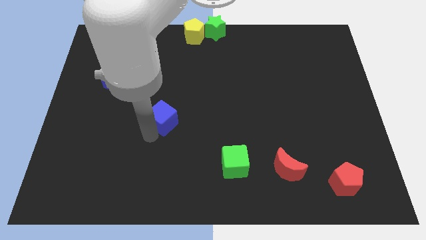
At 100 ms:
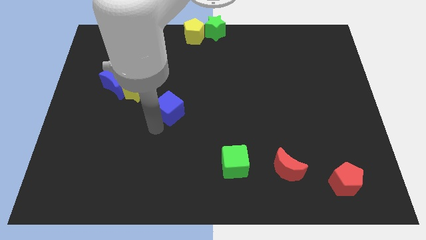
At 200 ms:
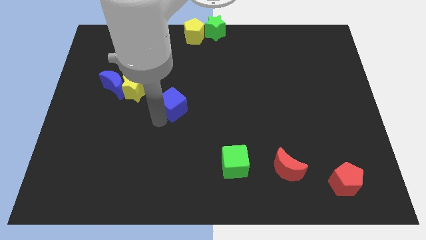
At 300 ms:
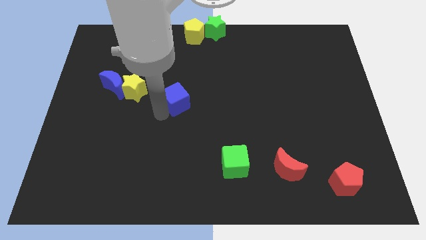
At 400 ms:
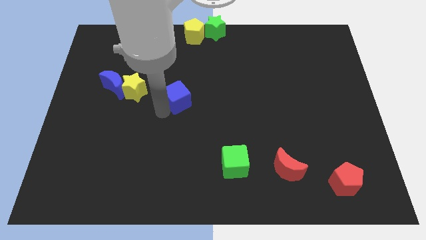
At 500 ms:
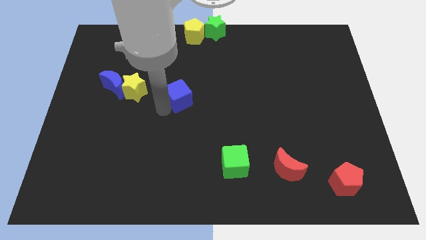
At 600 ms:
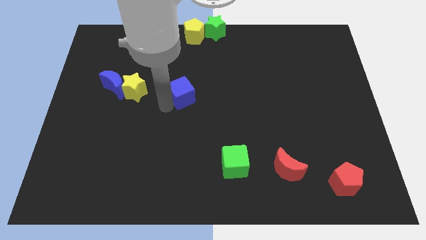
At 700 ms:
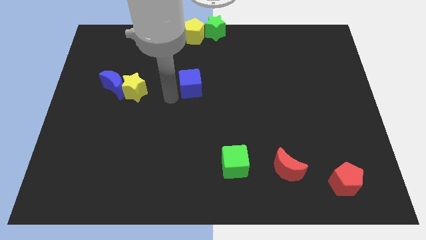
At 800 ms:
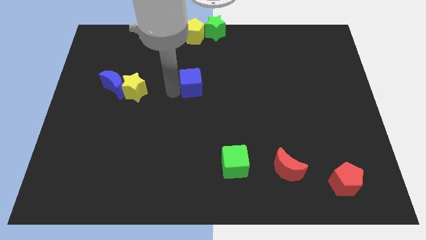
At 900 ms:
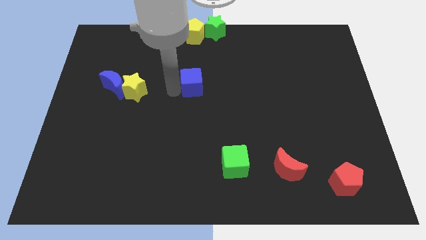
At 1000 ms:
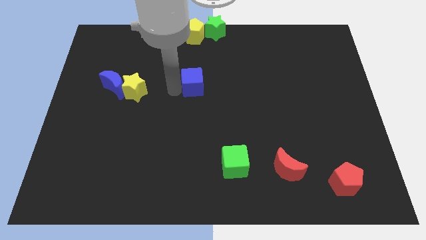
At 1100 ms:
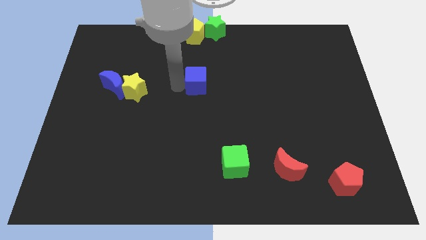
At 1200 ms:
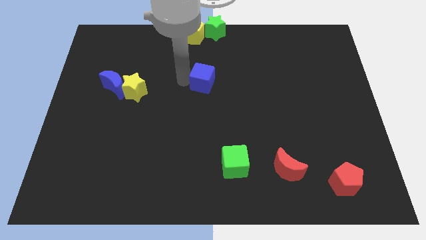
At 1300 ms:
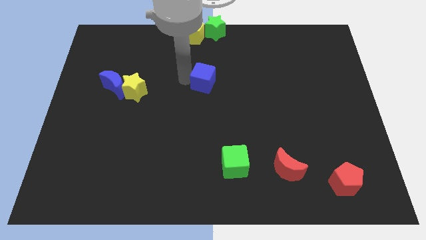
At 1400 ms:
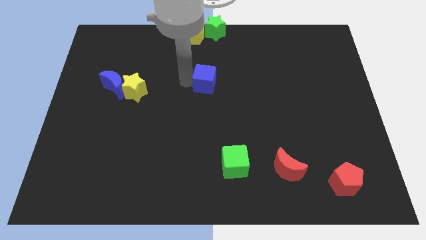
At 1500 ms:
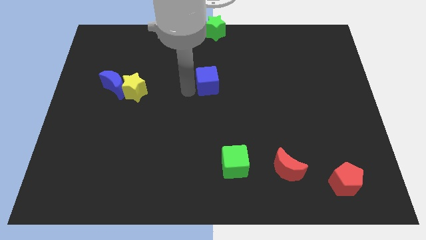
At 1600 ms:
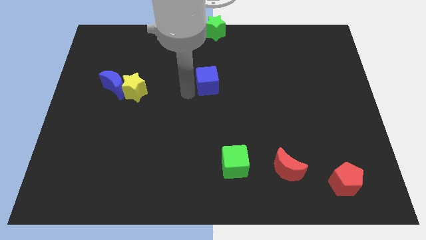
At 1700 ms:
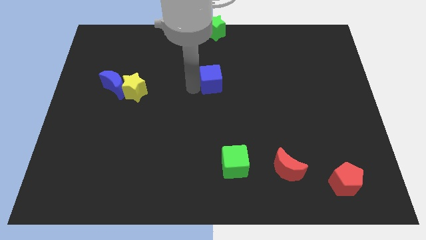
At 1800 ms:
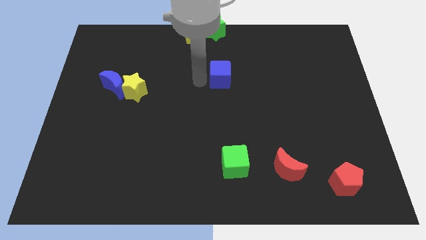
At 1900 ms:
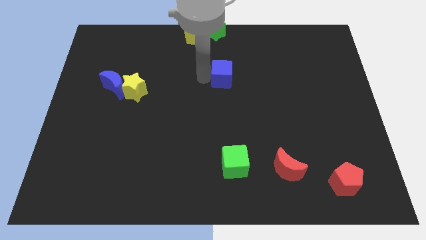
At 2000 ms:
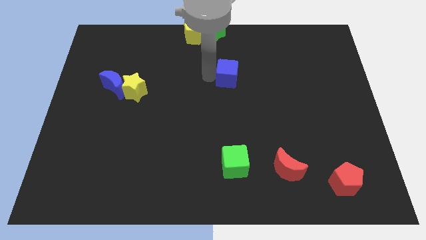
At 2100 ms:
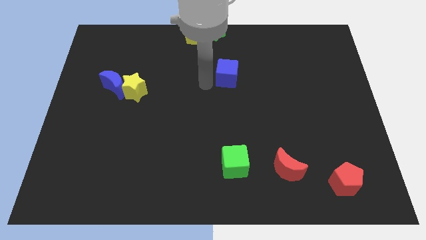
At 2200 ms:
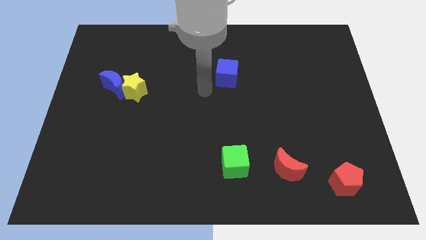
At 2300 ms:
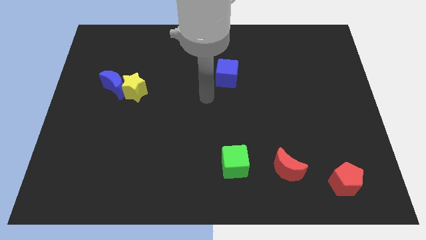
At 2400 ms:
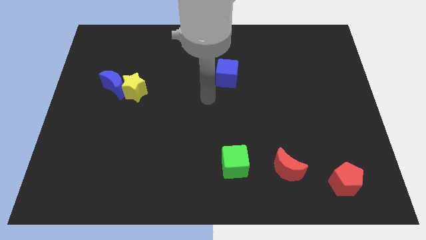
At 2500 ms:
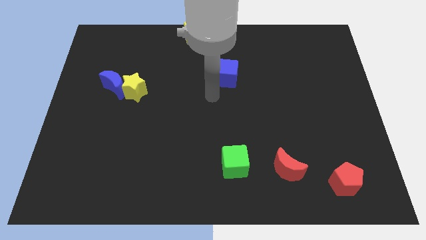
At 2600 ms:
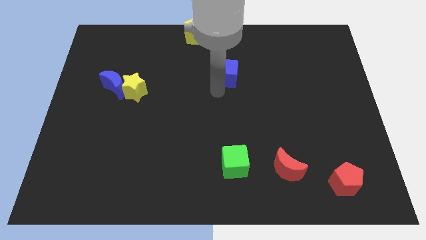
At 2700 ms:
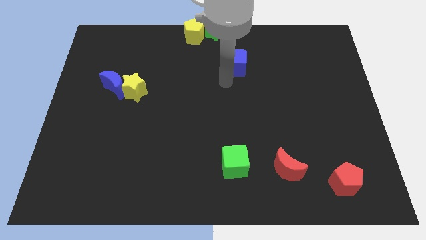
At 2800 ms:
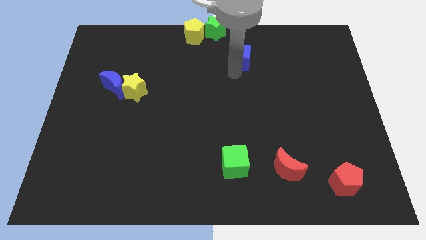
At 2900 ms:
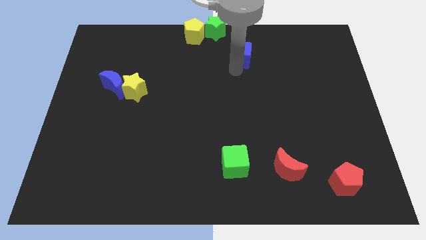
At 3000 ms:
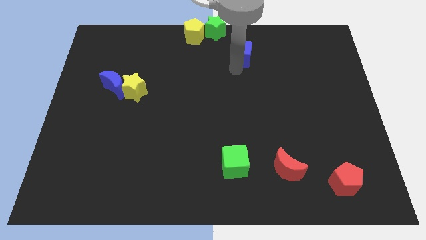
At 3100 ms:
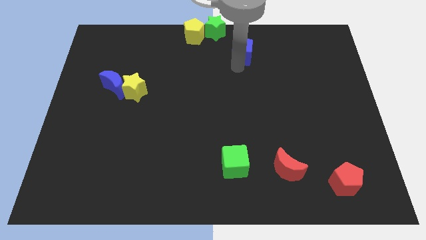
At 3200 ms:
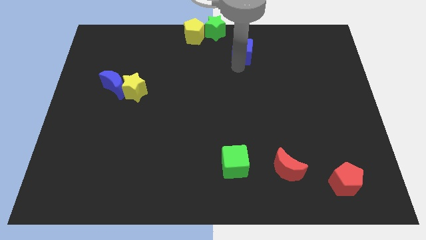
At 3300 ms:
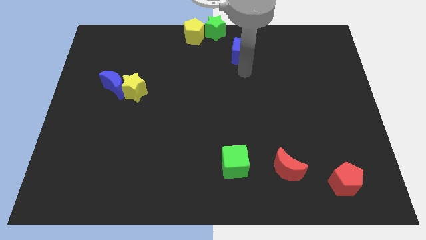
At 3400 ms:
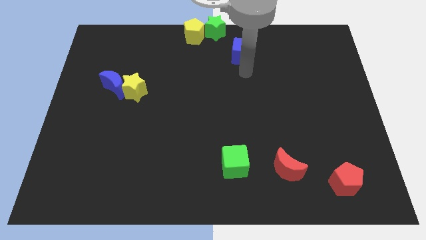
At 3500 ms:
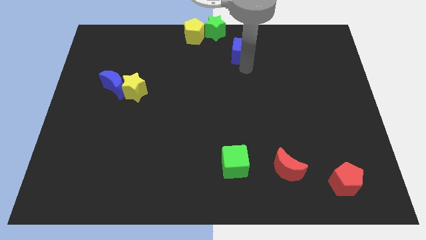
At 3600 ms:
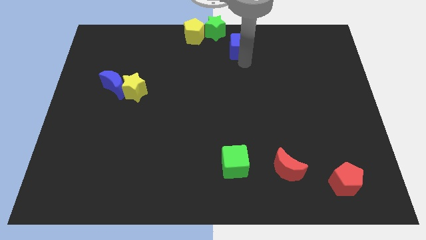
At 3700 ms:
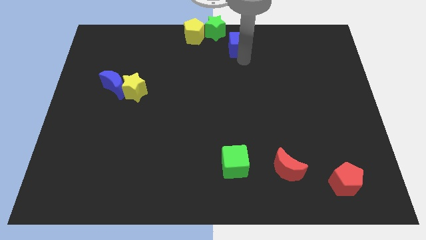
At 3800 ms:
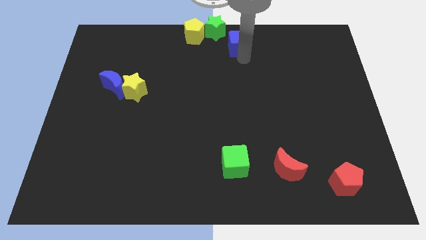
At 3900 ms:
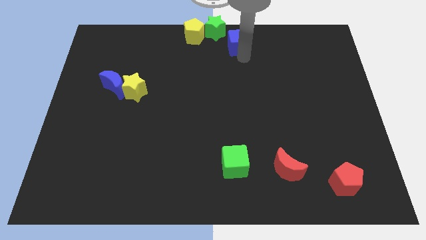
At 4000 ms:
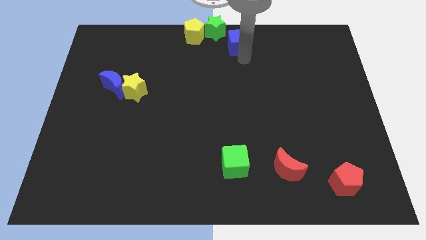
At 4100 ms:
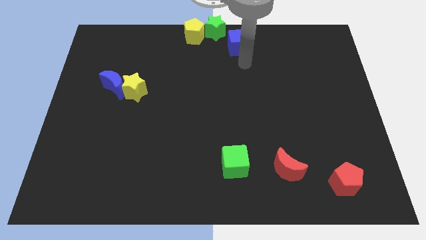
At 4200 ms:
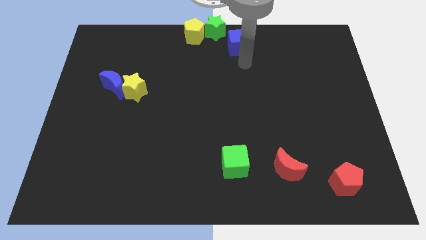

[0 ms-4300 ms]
move the blue cube to the top center of the board

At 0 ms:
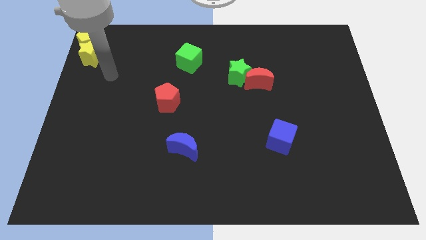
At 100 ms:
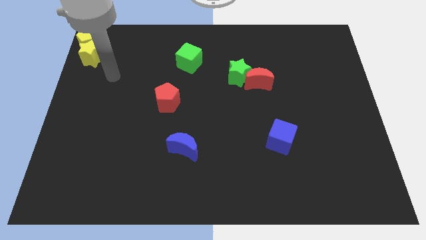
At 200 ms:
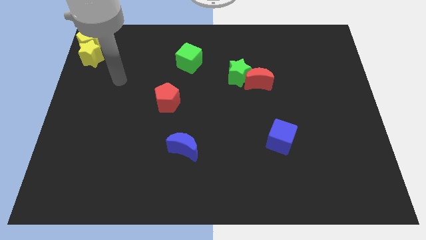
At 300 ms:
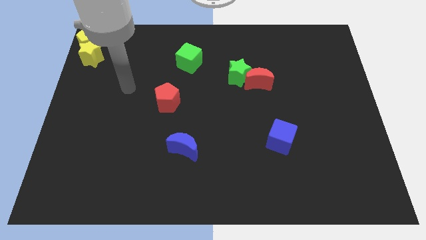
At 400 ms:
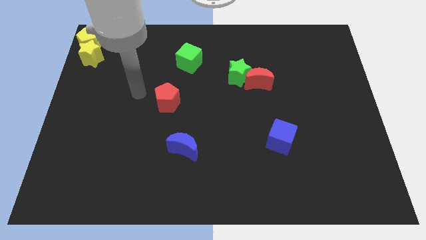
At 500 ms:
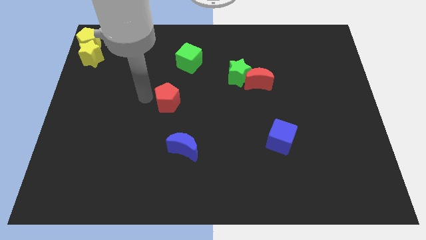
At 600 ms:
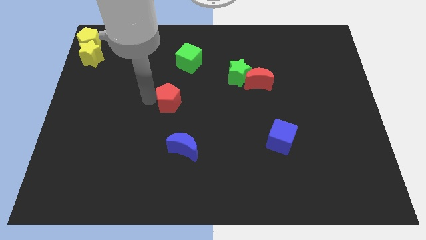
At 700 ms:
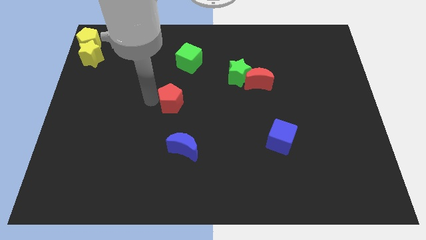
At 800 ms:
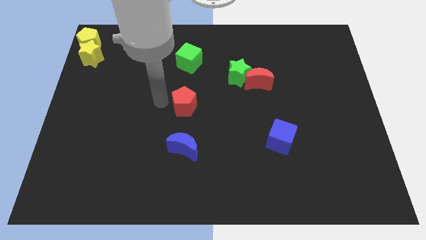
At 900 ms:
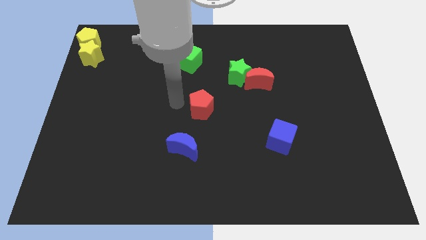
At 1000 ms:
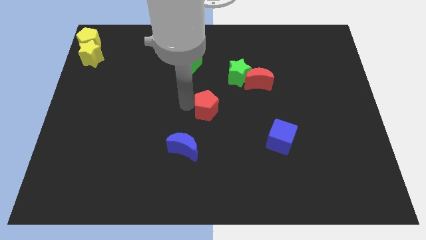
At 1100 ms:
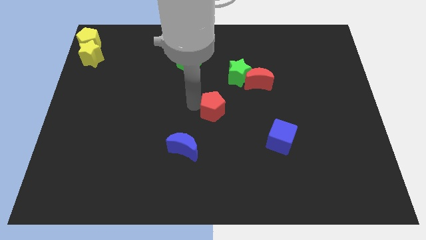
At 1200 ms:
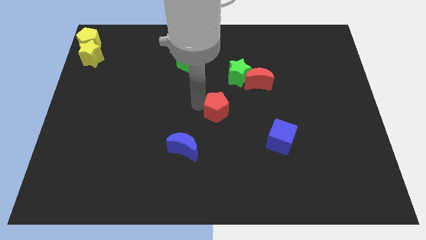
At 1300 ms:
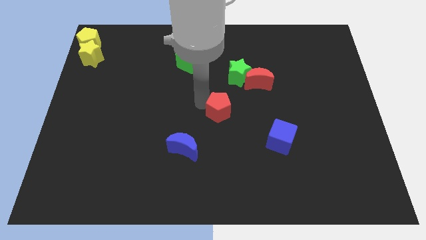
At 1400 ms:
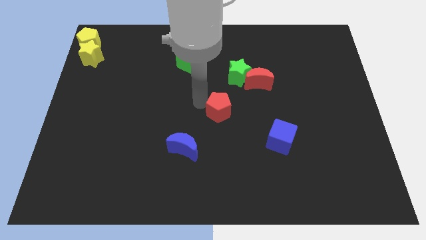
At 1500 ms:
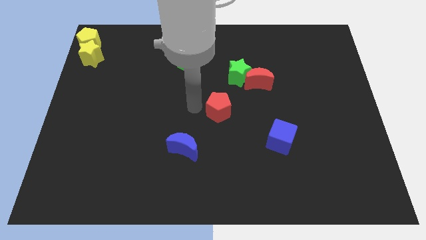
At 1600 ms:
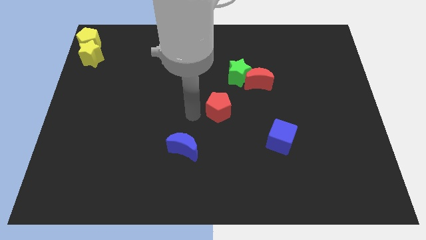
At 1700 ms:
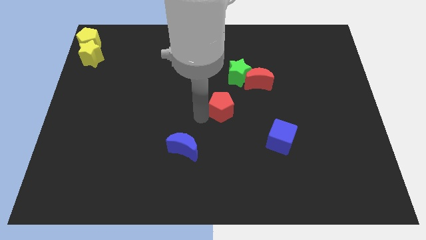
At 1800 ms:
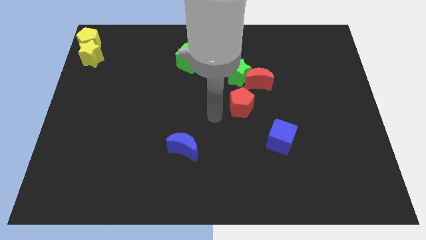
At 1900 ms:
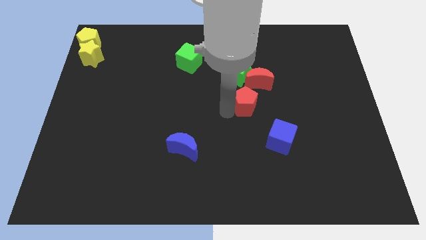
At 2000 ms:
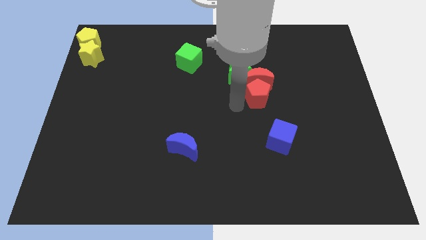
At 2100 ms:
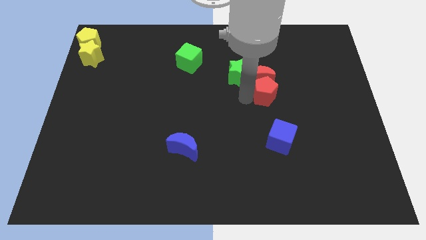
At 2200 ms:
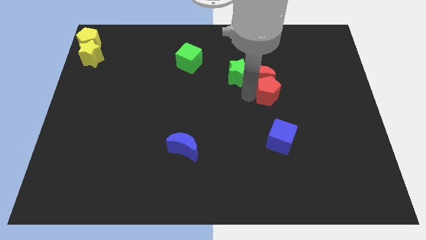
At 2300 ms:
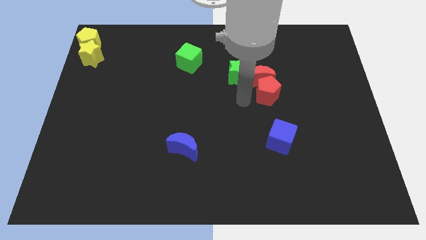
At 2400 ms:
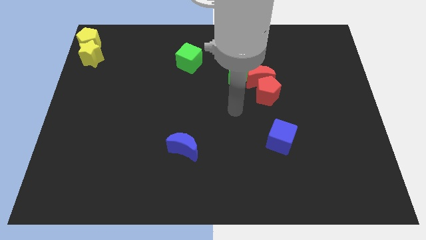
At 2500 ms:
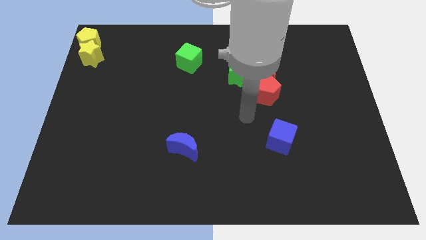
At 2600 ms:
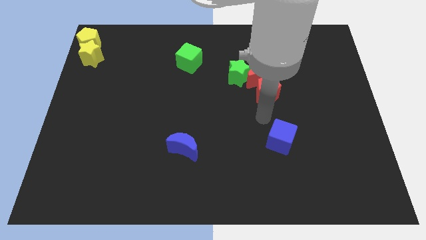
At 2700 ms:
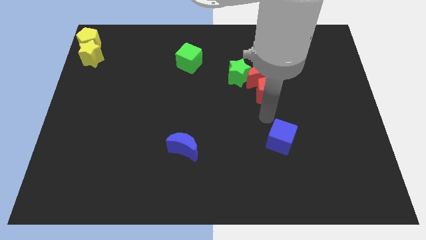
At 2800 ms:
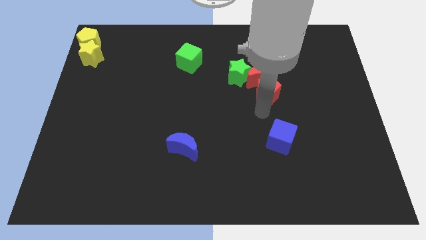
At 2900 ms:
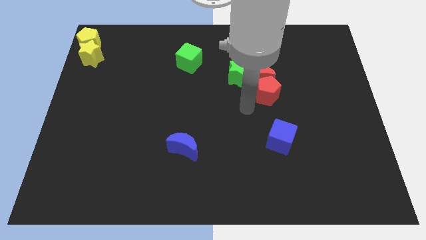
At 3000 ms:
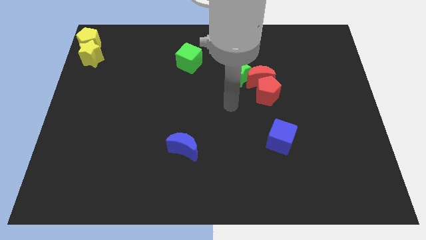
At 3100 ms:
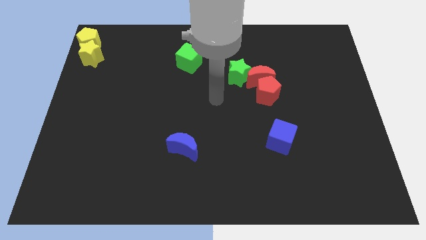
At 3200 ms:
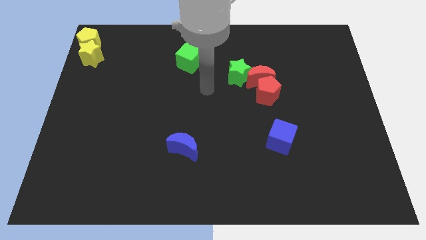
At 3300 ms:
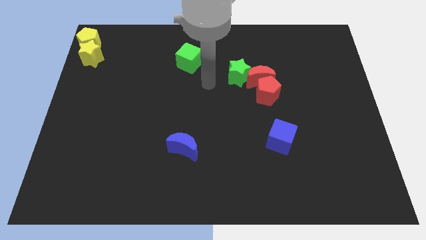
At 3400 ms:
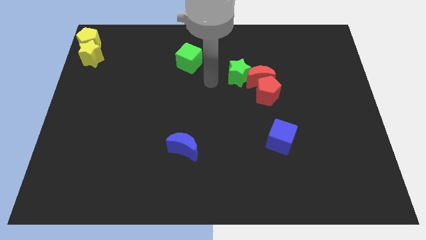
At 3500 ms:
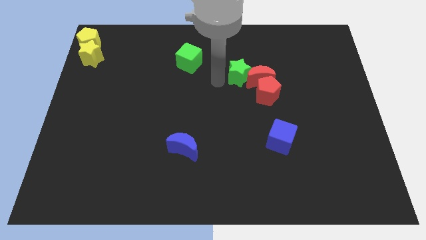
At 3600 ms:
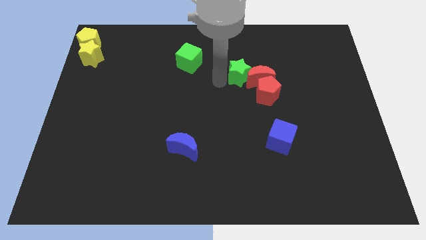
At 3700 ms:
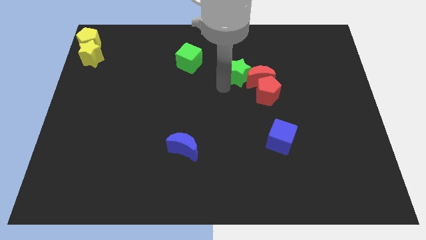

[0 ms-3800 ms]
move the red pentagon to the bottom of the red crescent

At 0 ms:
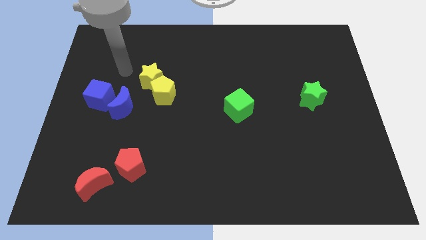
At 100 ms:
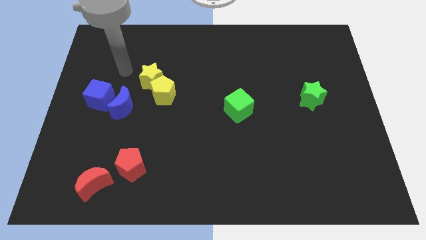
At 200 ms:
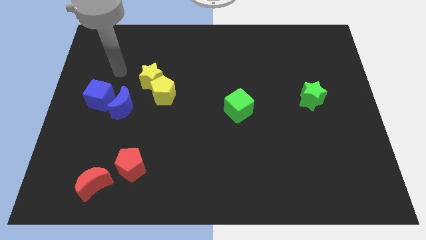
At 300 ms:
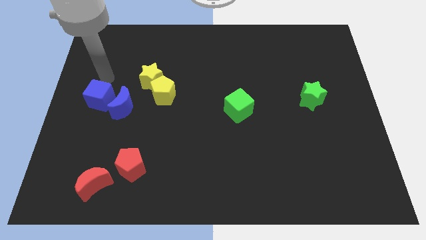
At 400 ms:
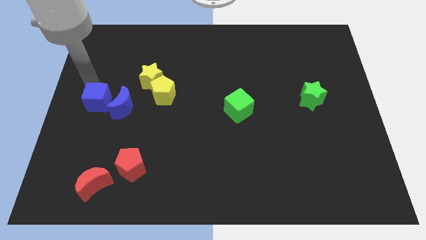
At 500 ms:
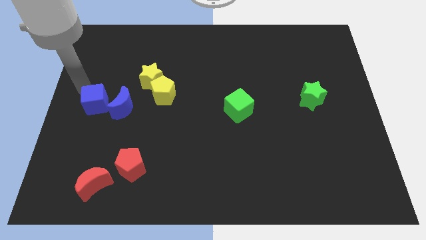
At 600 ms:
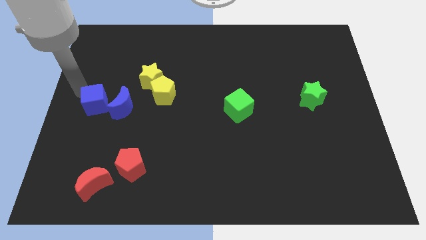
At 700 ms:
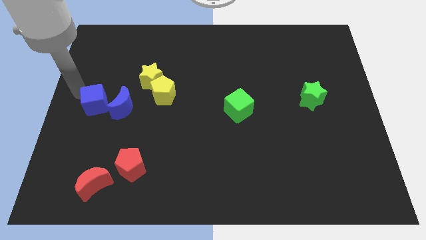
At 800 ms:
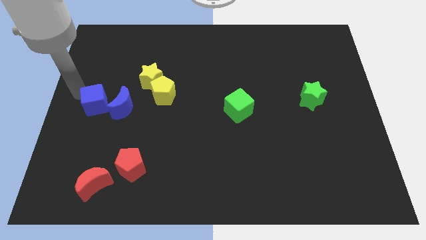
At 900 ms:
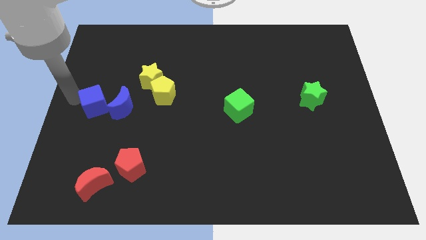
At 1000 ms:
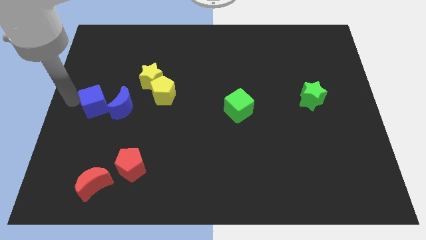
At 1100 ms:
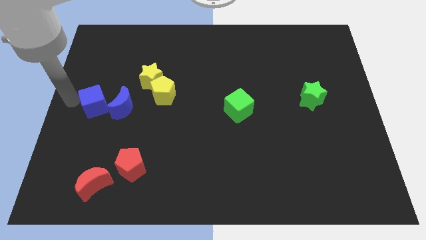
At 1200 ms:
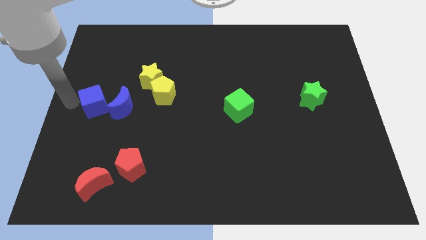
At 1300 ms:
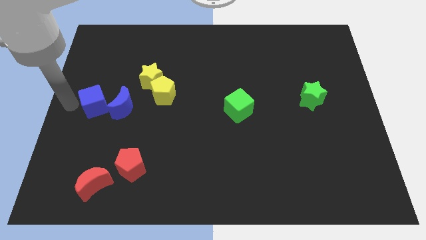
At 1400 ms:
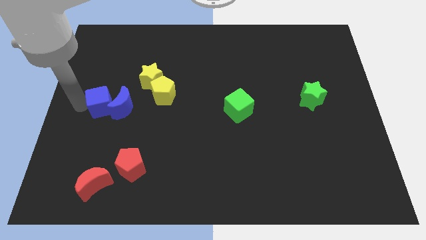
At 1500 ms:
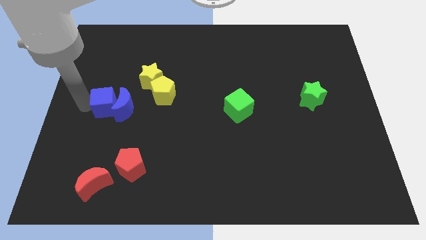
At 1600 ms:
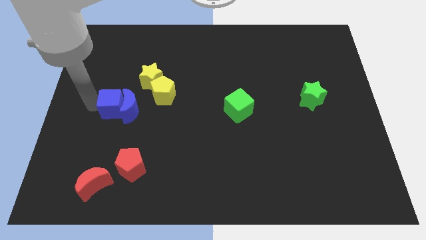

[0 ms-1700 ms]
push the blue cube into the blue crescent
